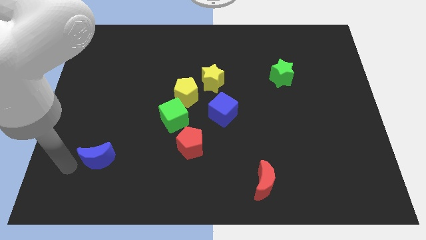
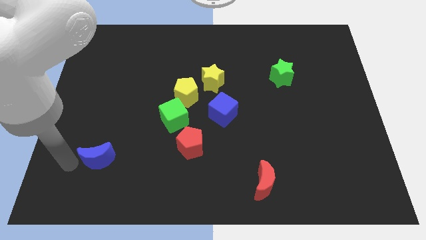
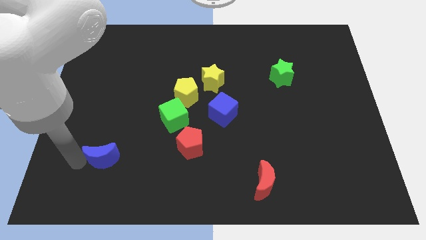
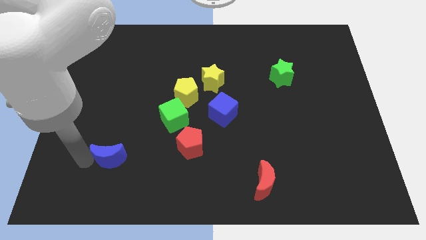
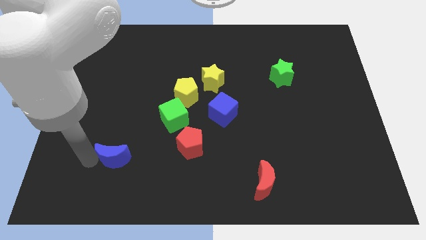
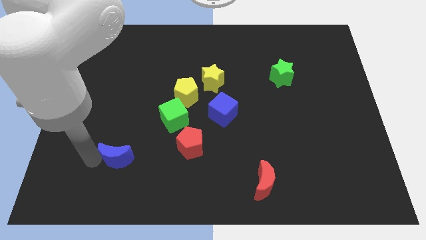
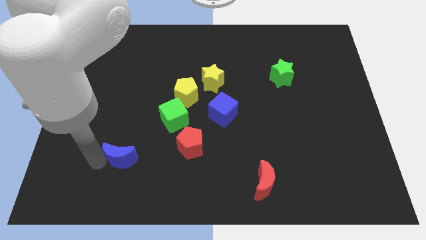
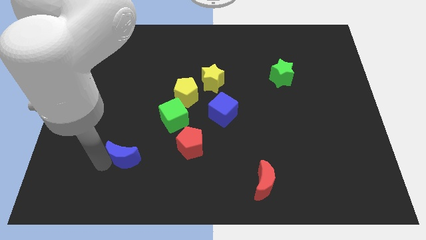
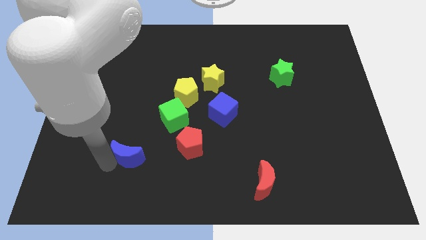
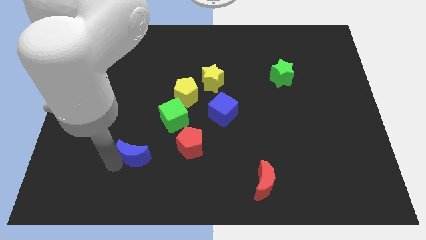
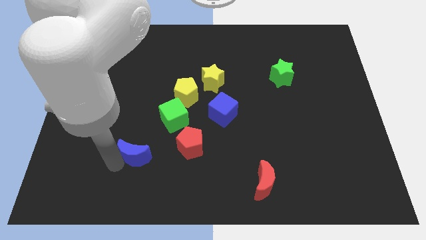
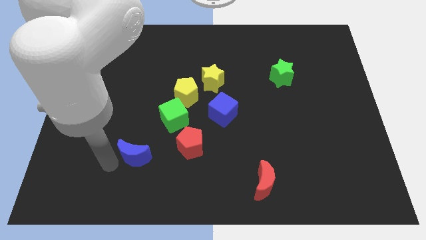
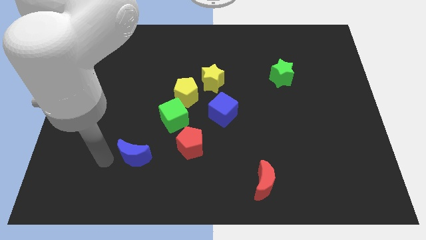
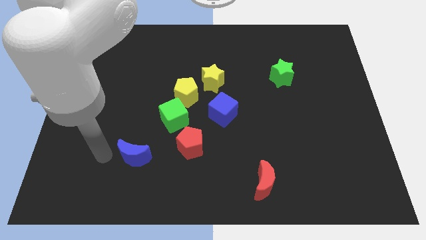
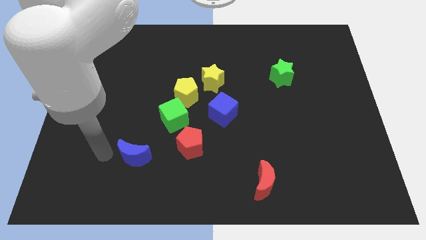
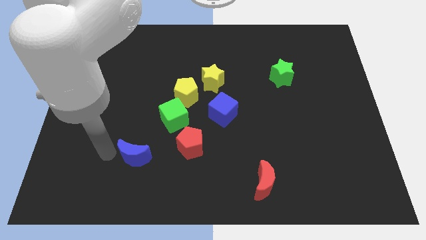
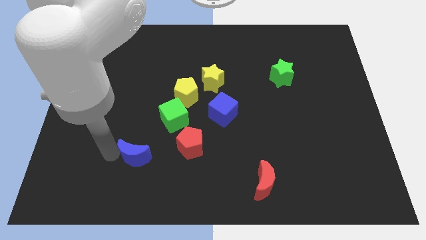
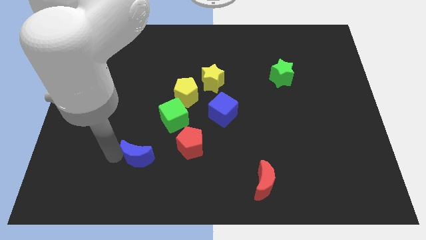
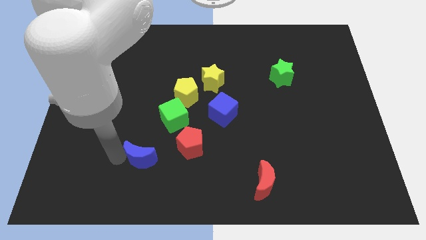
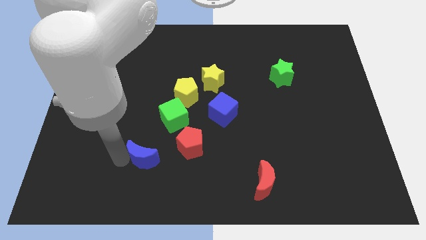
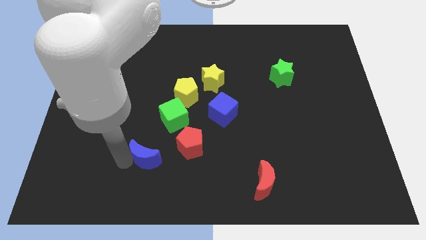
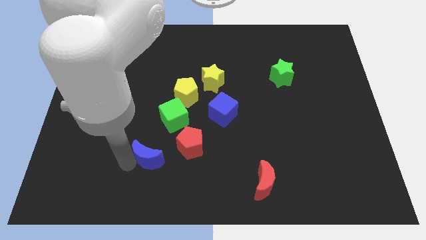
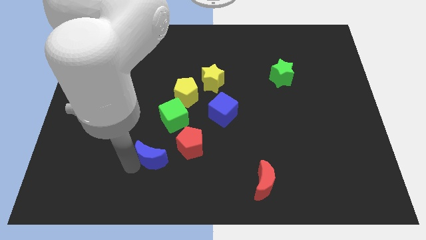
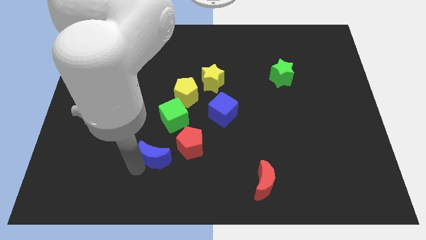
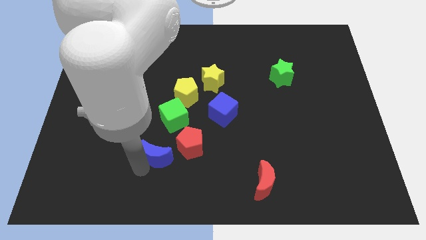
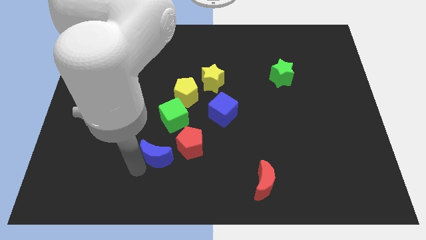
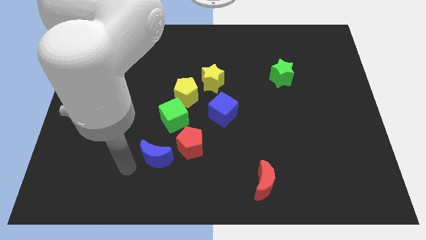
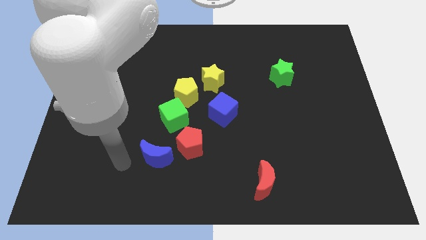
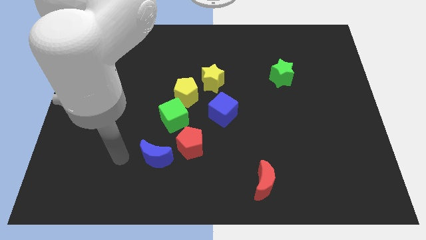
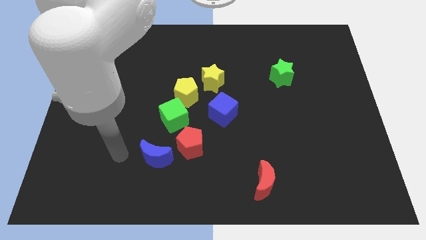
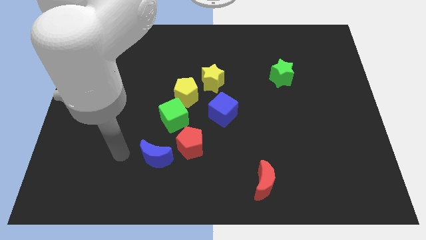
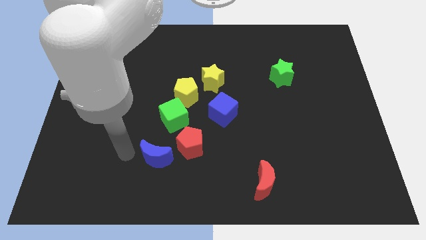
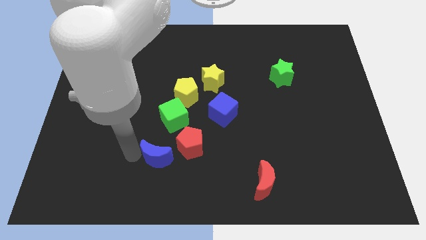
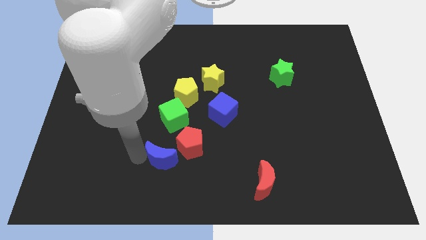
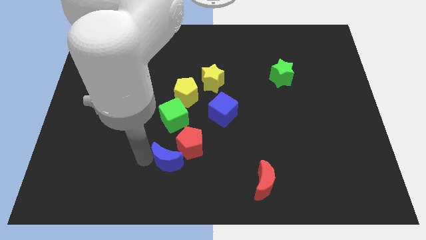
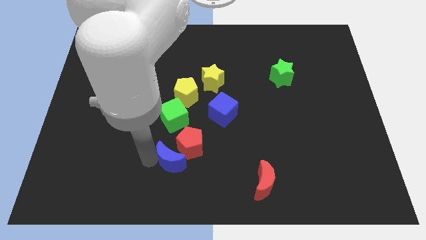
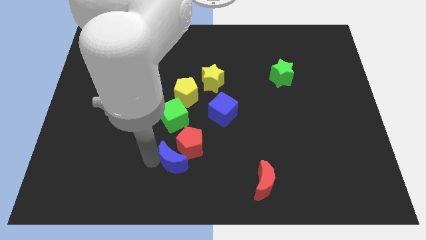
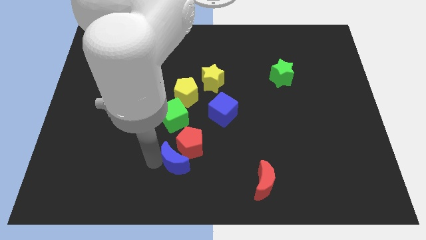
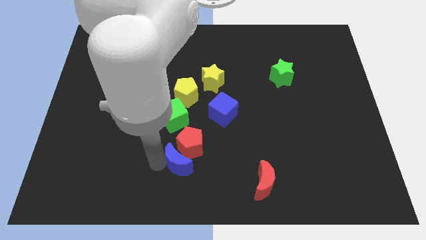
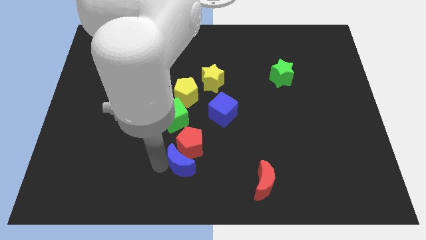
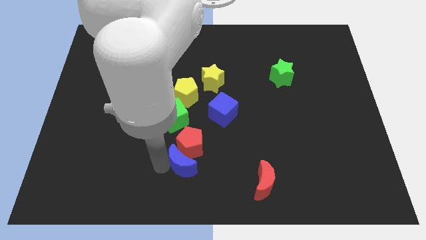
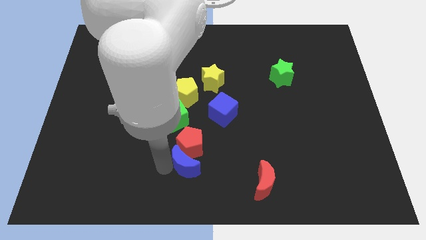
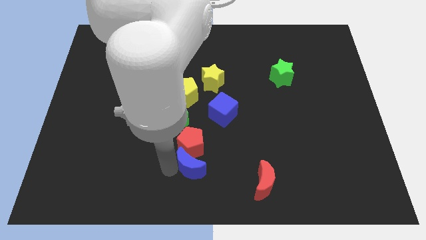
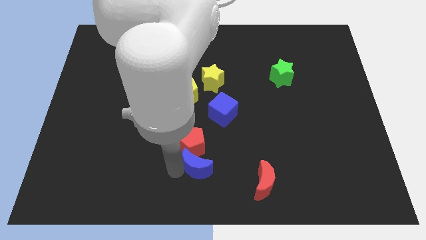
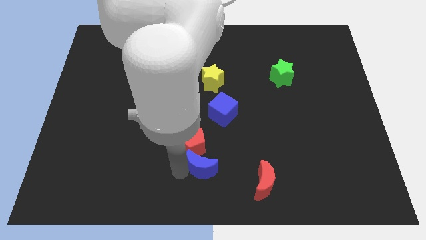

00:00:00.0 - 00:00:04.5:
push the blue crescent into the red pentagon

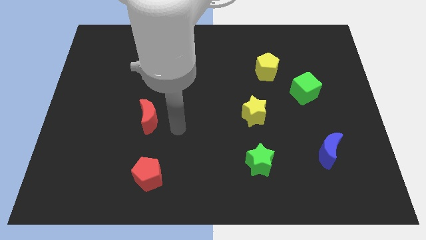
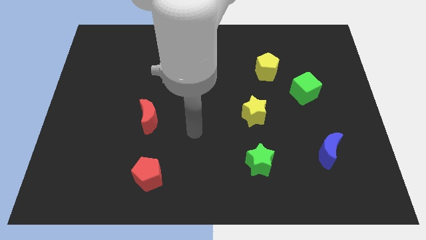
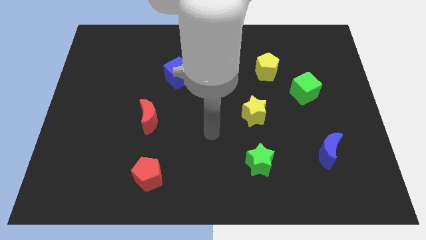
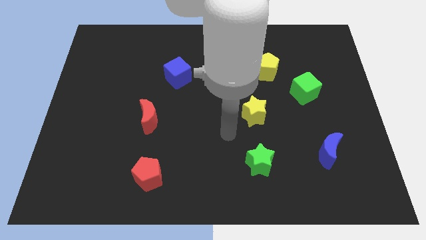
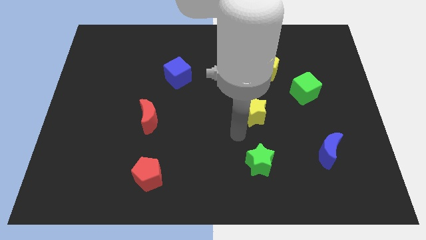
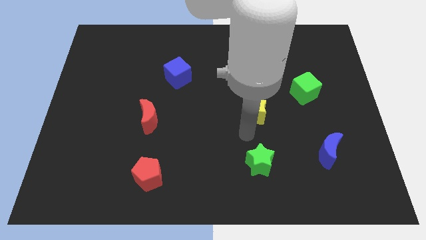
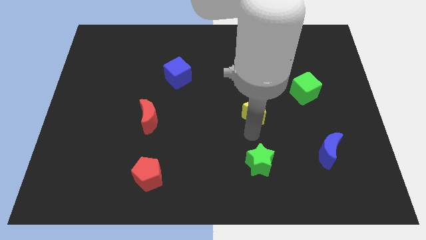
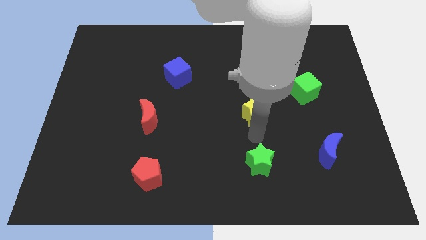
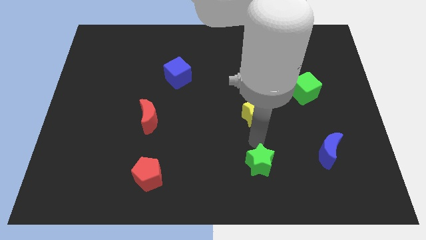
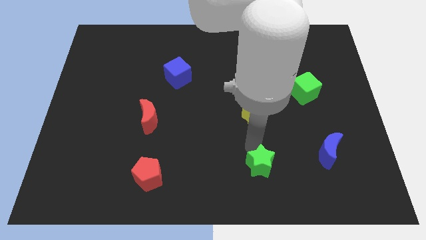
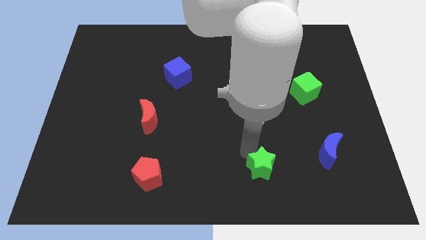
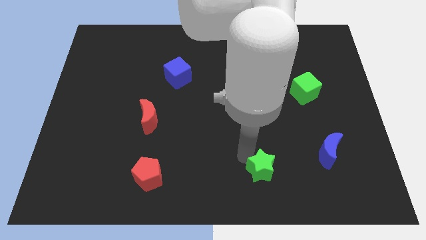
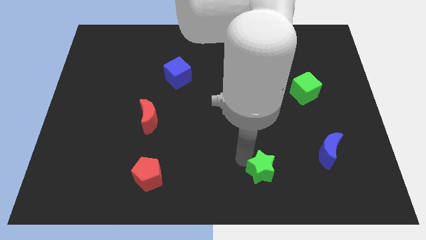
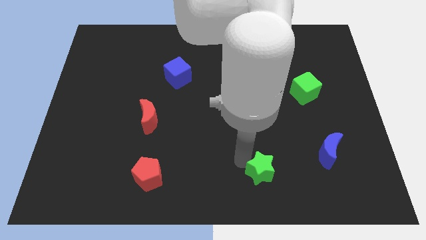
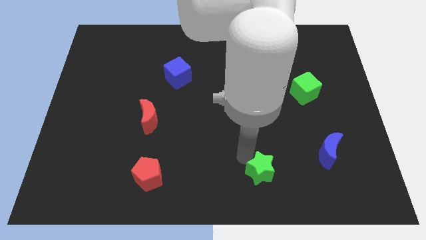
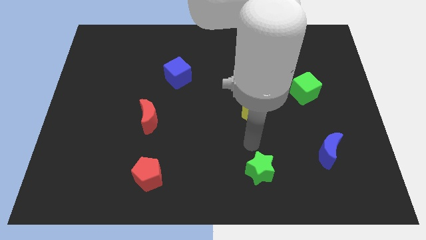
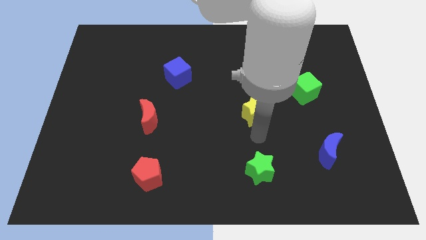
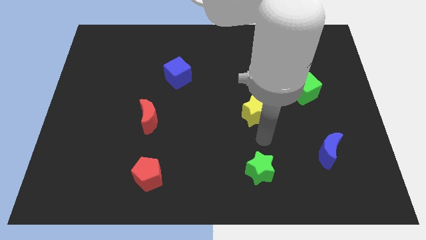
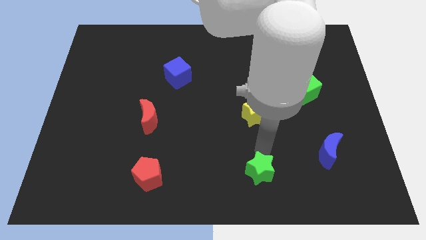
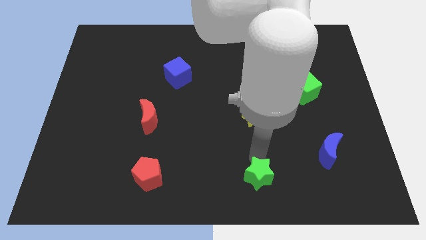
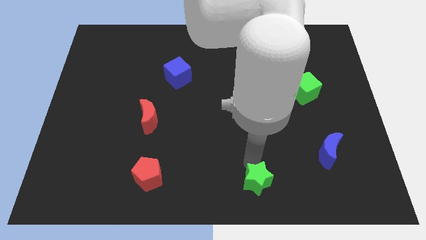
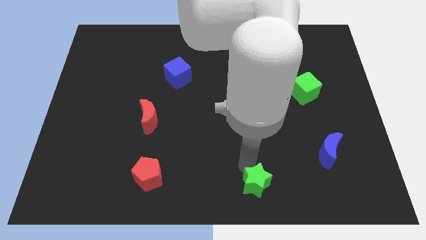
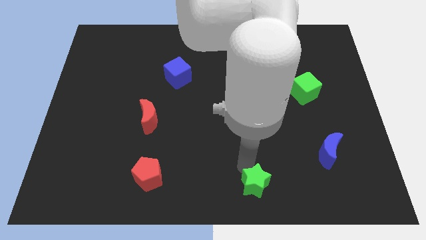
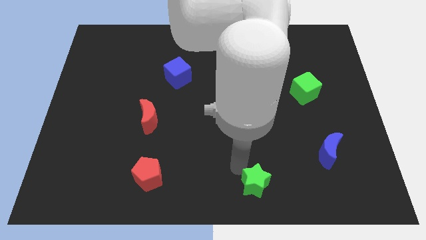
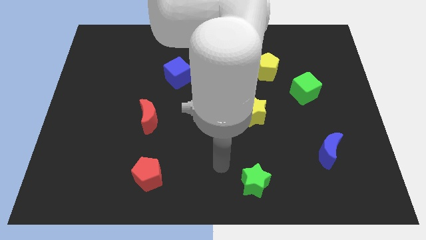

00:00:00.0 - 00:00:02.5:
push the green star below yellow star

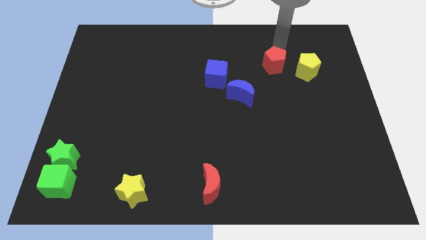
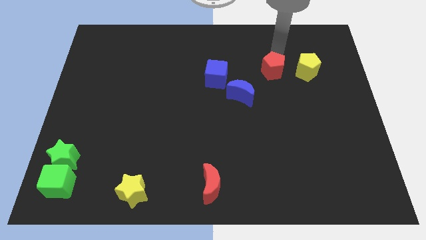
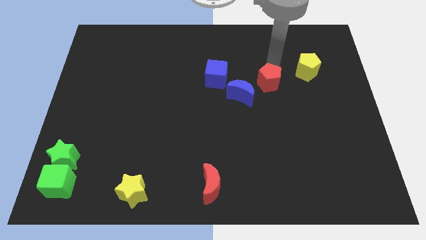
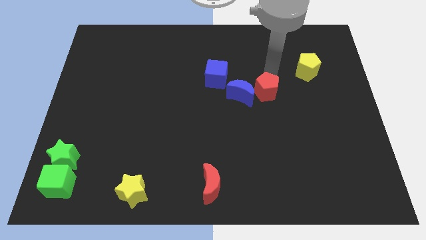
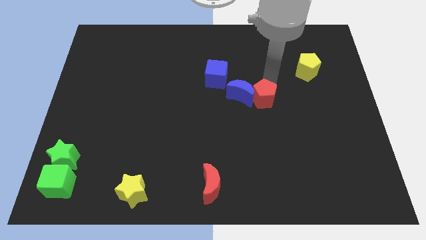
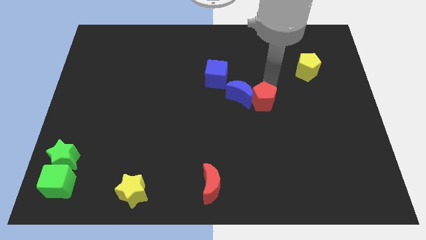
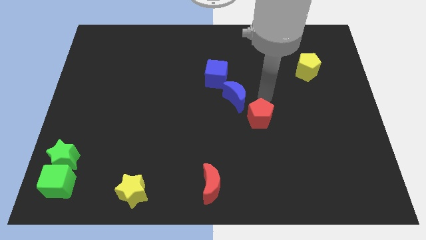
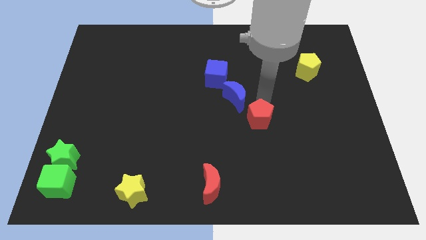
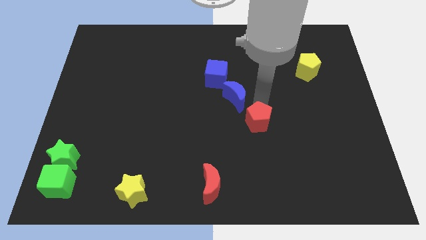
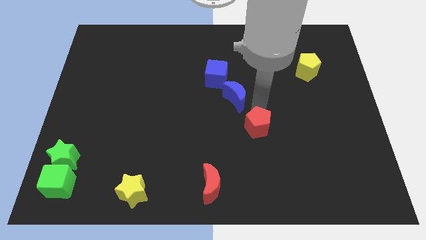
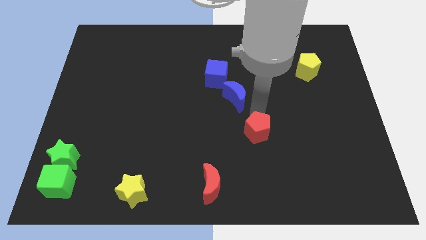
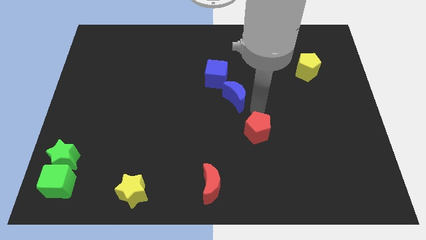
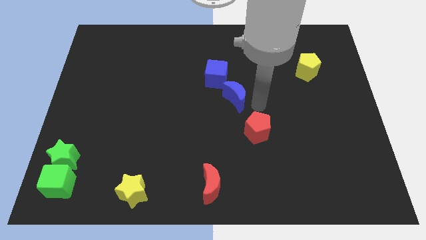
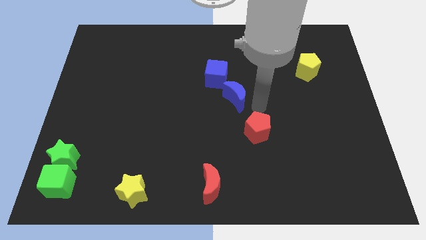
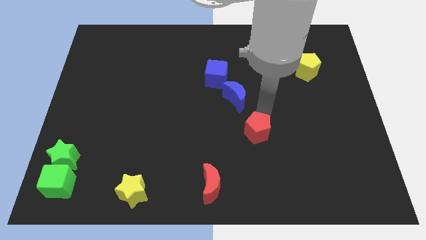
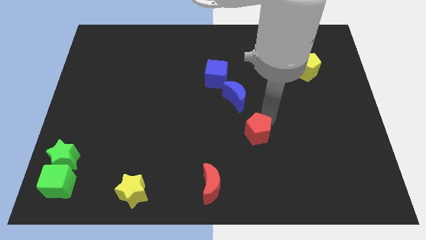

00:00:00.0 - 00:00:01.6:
move the red pentagon to the slight right bottom of the blue crescent

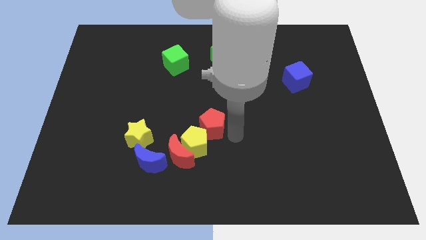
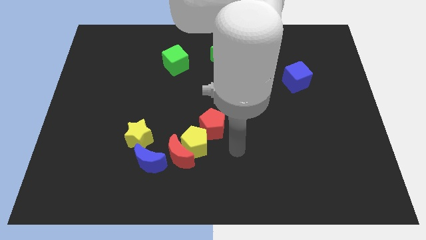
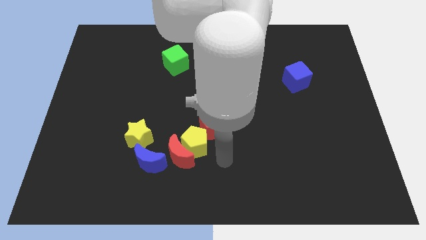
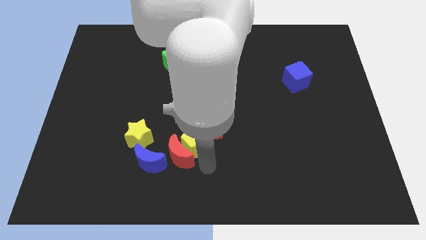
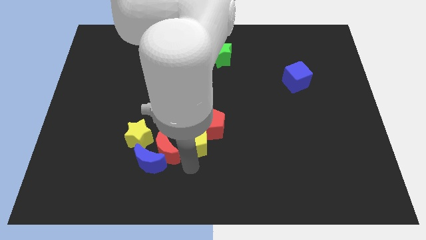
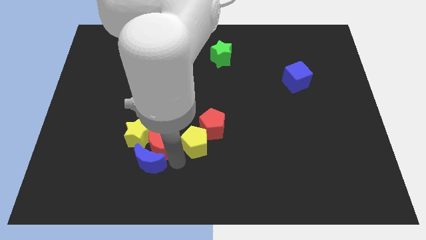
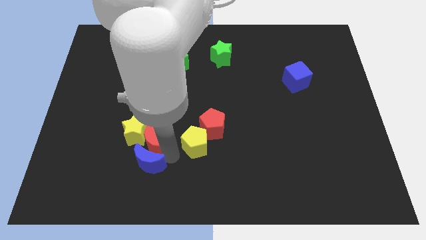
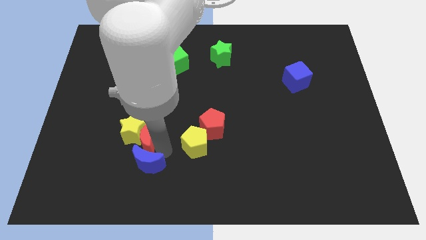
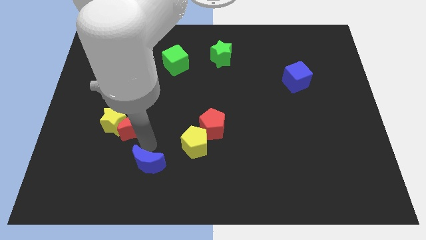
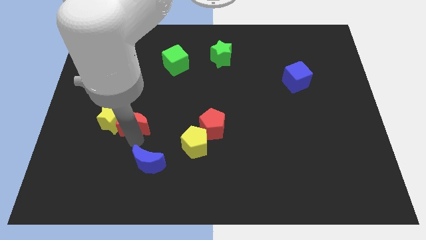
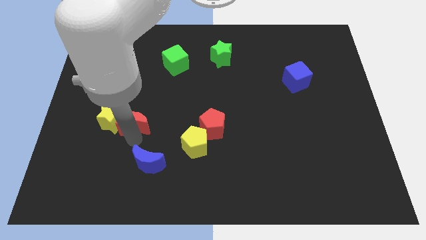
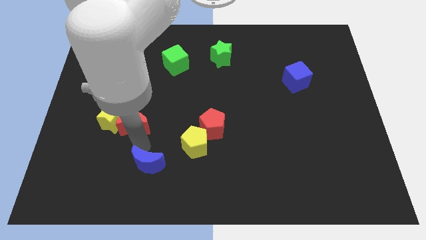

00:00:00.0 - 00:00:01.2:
push the yellow star with the red pentagon towards the left center of the board
